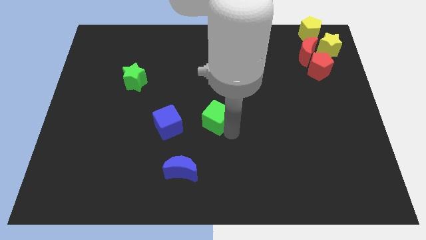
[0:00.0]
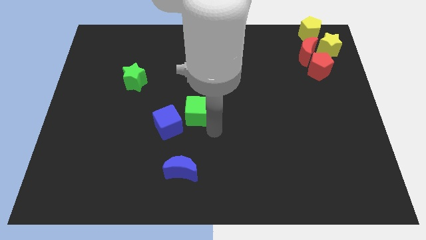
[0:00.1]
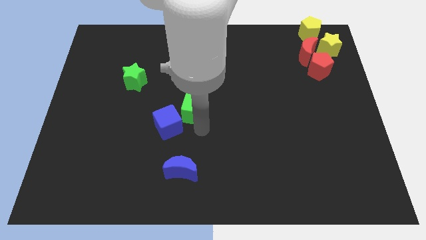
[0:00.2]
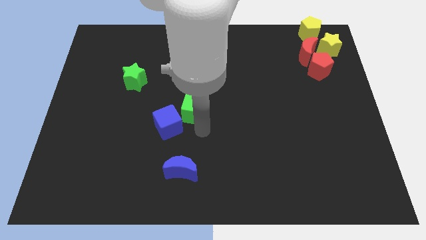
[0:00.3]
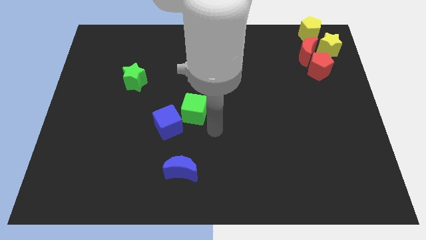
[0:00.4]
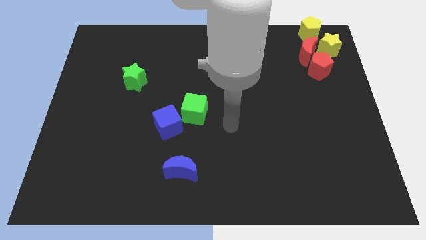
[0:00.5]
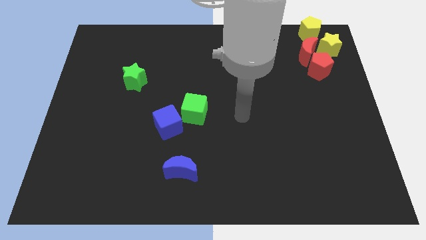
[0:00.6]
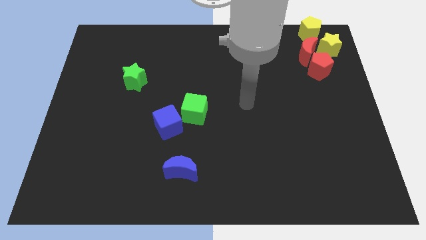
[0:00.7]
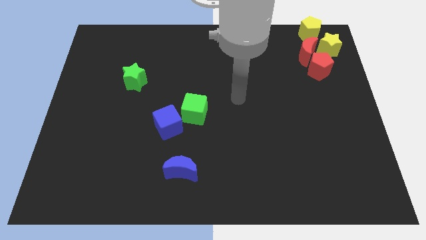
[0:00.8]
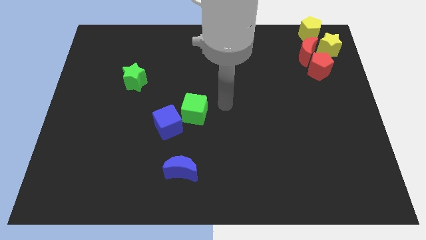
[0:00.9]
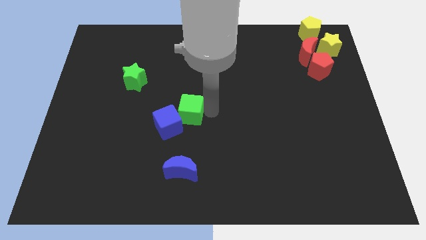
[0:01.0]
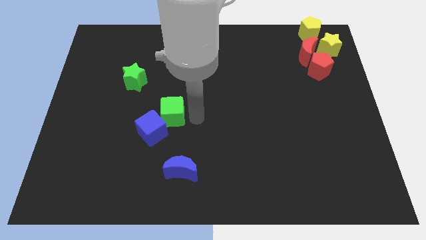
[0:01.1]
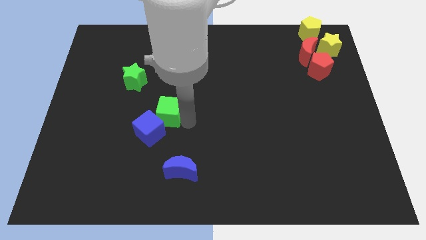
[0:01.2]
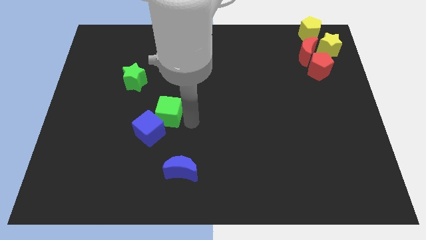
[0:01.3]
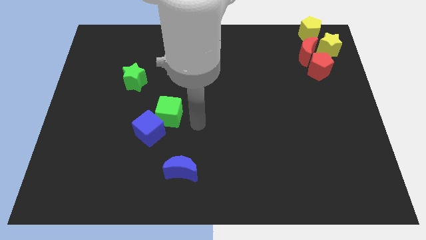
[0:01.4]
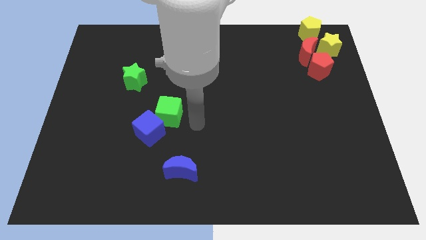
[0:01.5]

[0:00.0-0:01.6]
group up the two cubes between the green star and the blue crescent

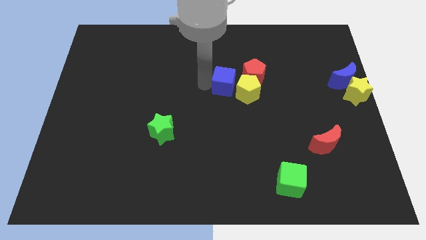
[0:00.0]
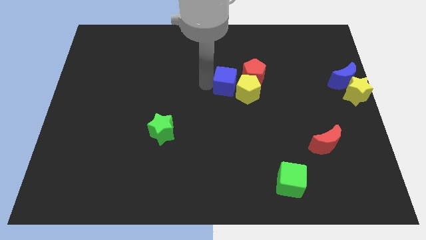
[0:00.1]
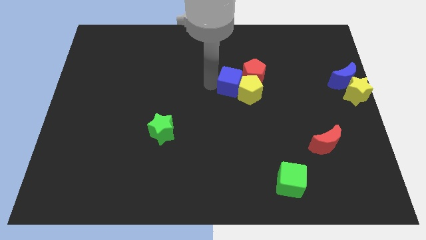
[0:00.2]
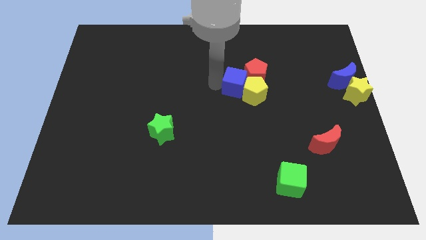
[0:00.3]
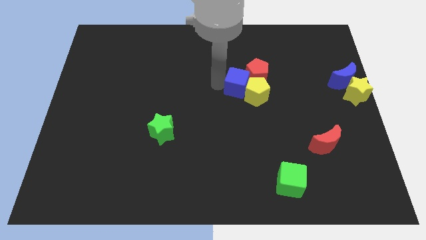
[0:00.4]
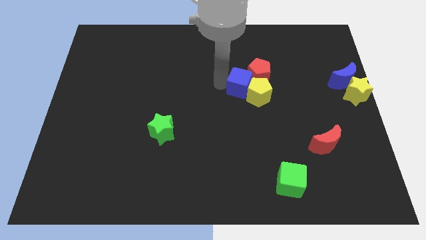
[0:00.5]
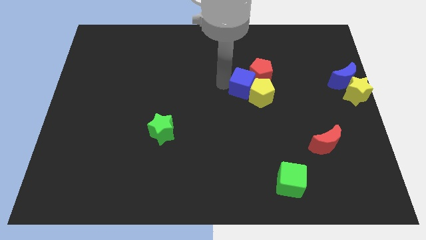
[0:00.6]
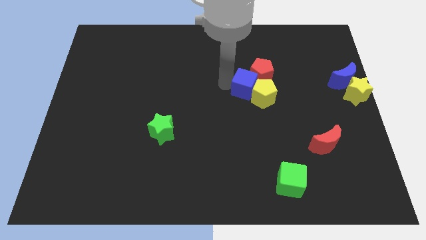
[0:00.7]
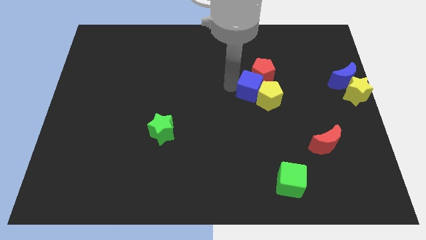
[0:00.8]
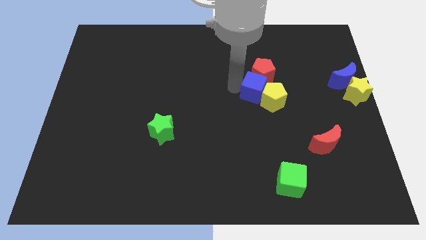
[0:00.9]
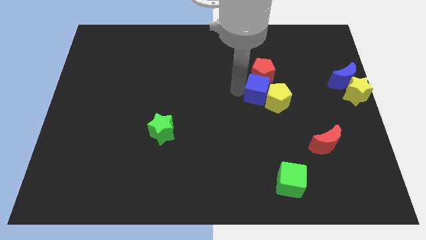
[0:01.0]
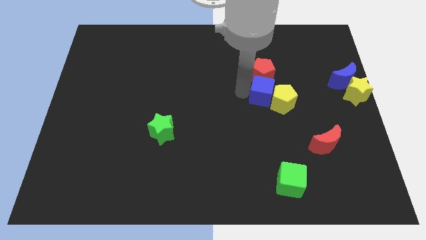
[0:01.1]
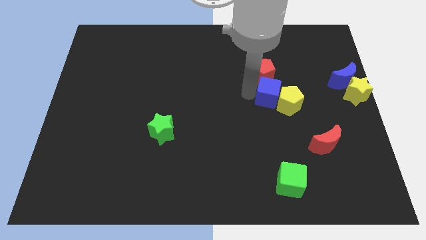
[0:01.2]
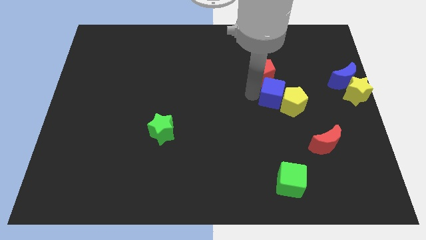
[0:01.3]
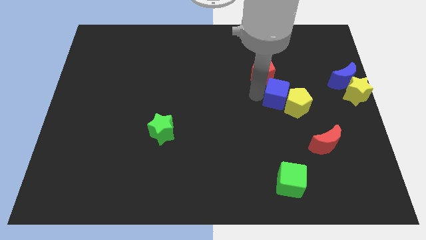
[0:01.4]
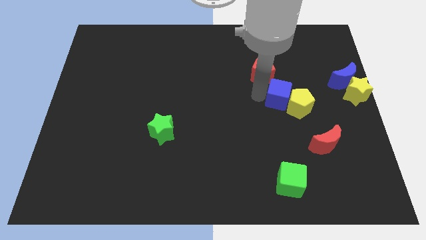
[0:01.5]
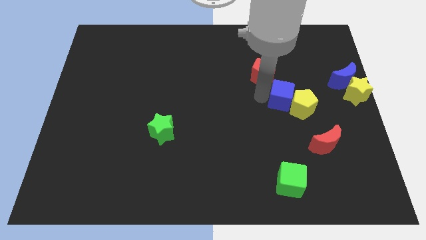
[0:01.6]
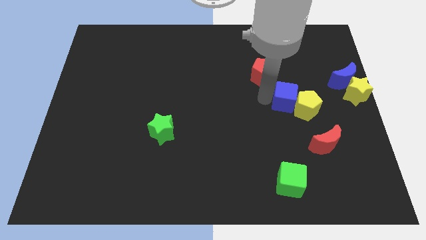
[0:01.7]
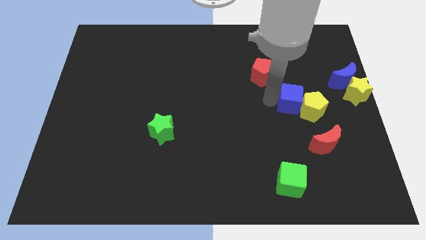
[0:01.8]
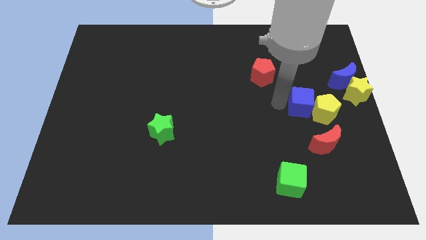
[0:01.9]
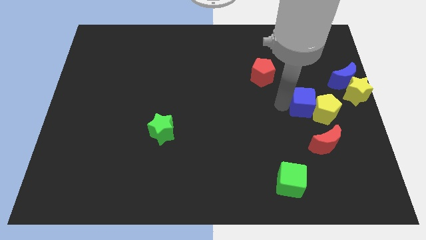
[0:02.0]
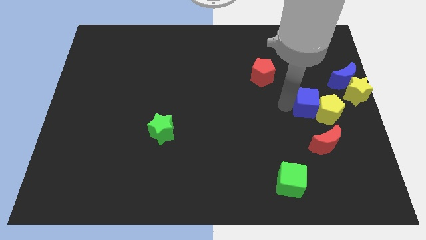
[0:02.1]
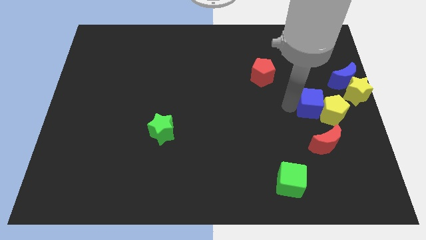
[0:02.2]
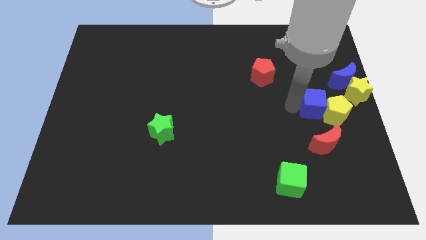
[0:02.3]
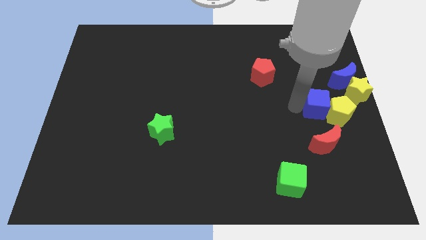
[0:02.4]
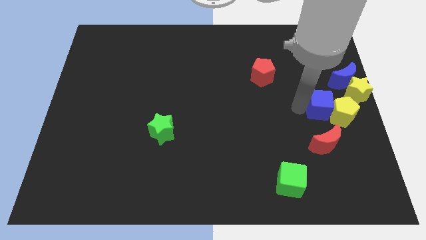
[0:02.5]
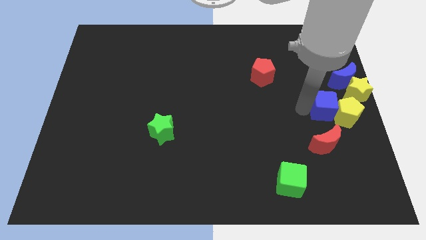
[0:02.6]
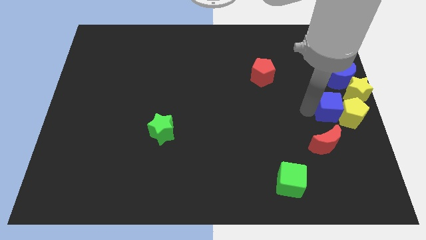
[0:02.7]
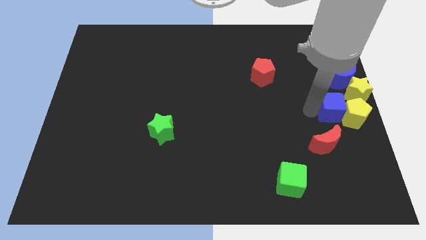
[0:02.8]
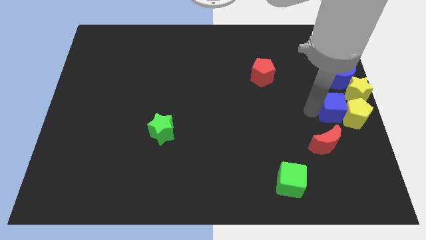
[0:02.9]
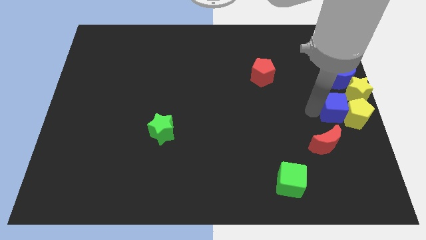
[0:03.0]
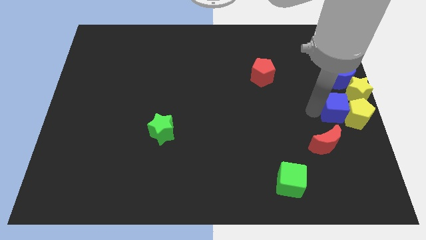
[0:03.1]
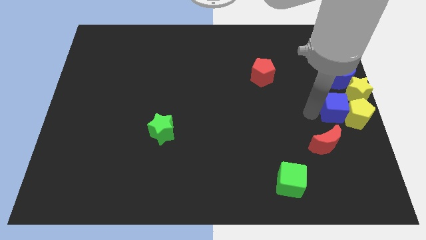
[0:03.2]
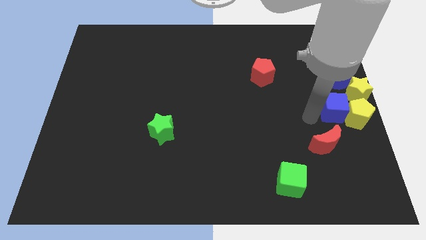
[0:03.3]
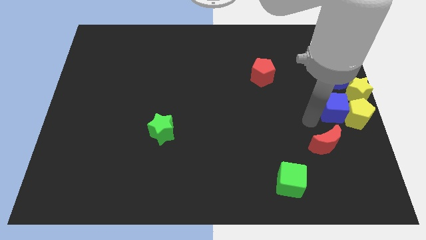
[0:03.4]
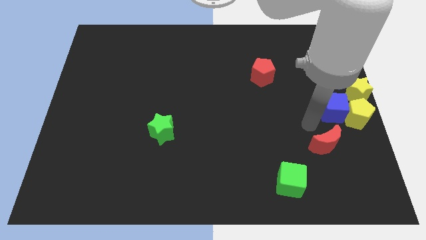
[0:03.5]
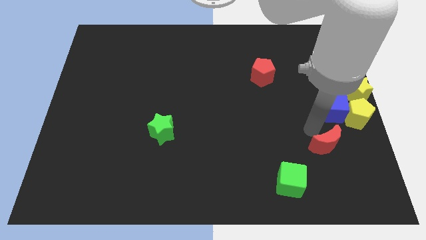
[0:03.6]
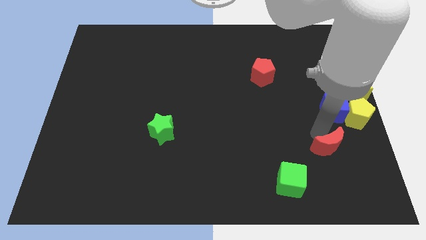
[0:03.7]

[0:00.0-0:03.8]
push the yellow pentagon with the help of blue cube towards the center right of the board

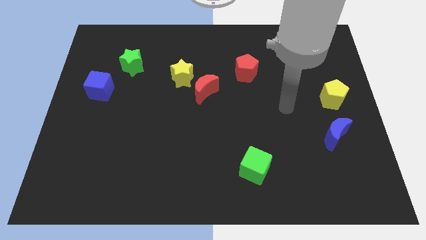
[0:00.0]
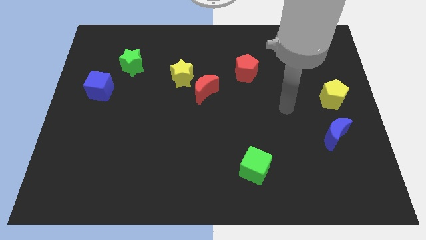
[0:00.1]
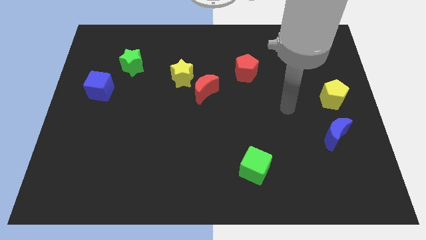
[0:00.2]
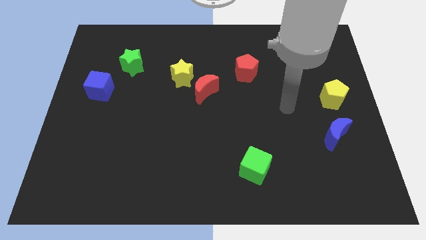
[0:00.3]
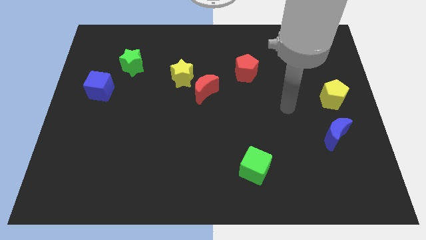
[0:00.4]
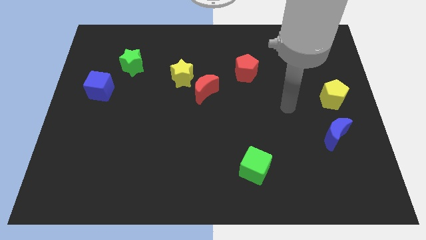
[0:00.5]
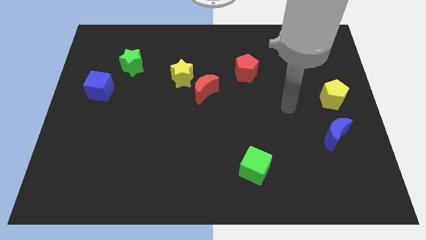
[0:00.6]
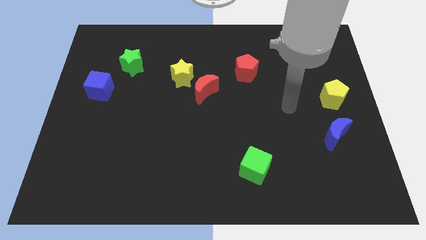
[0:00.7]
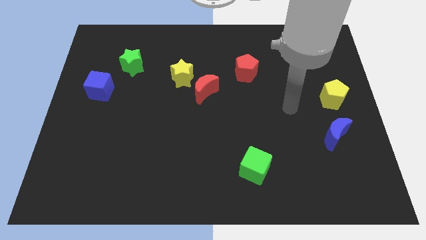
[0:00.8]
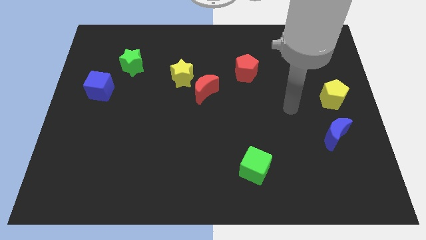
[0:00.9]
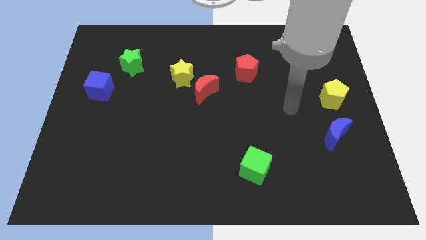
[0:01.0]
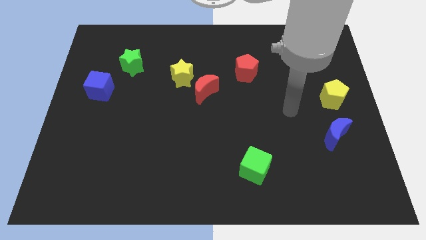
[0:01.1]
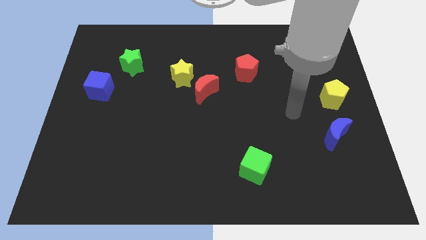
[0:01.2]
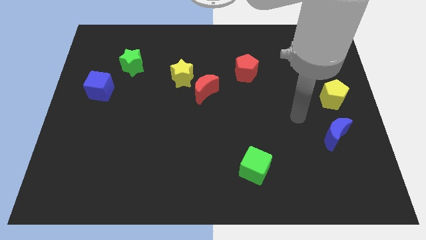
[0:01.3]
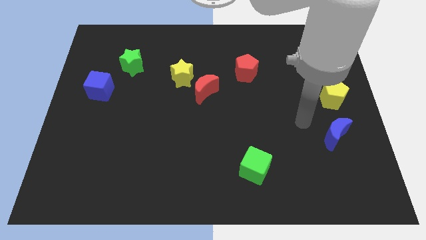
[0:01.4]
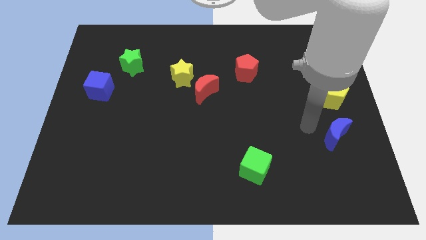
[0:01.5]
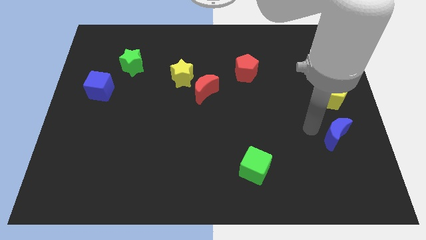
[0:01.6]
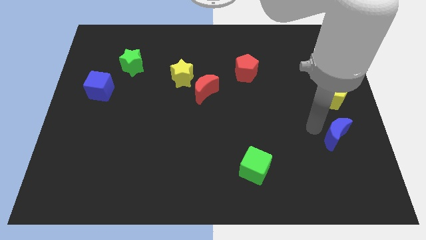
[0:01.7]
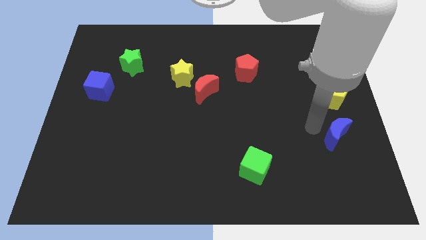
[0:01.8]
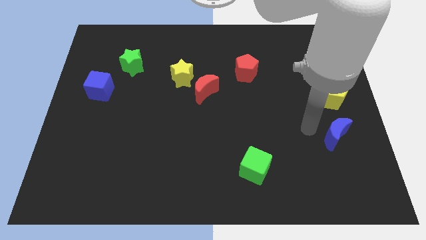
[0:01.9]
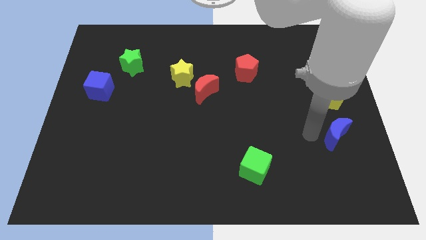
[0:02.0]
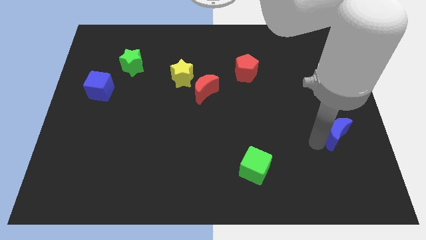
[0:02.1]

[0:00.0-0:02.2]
place your arm to the left of blue moon

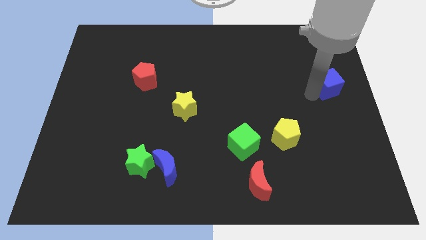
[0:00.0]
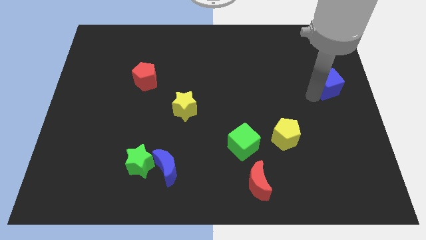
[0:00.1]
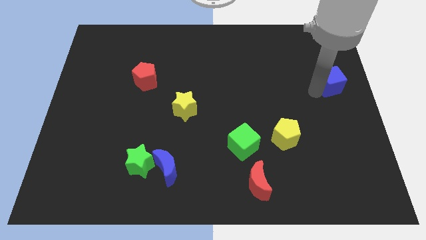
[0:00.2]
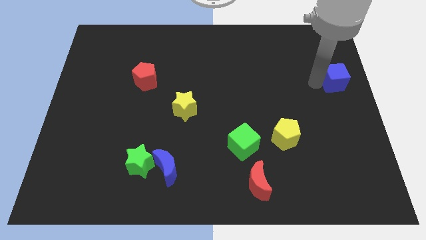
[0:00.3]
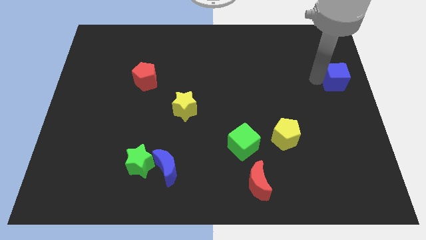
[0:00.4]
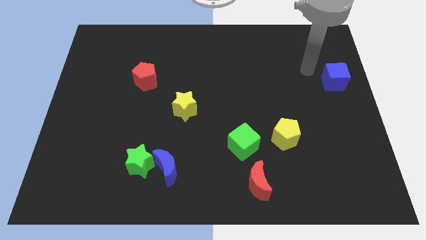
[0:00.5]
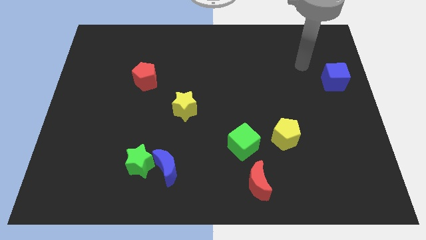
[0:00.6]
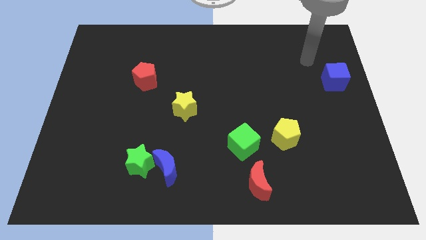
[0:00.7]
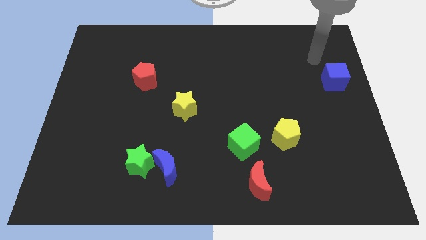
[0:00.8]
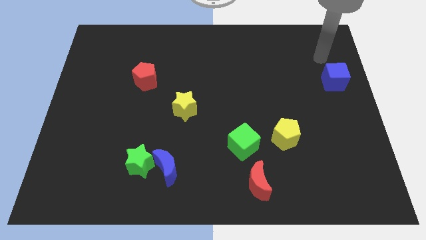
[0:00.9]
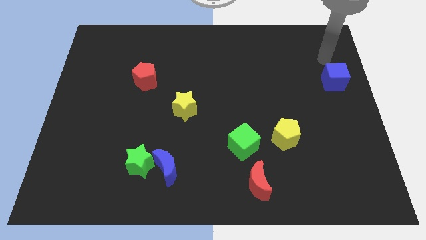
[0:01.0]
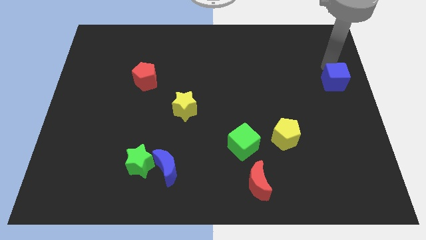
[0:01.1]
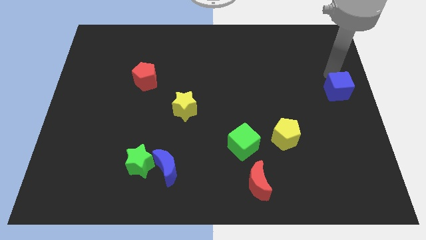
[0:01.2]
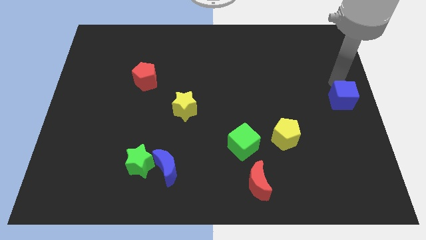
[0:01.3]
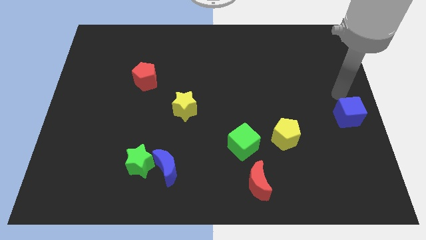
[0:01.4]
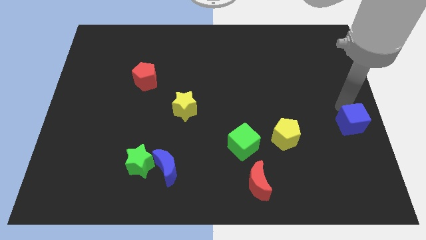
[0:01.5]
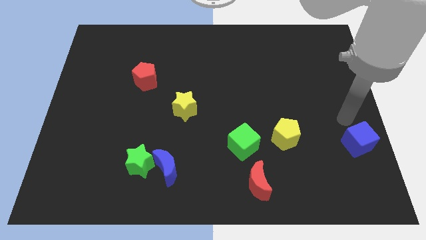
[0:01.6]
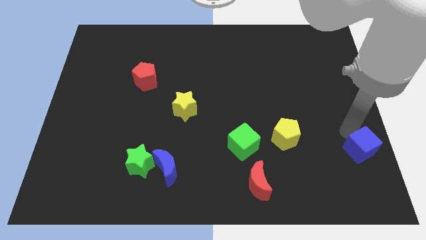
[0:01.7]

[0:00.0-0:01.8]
move the blue cube to the right of yellow pentagon
